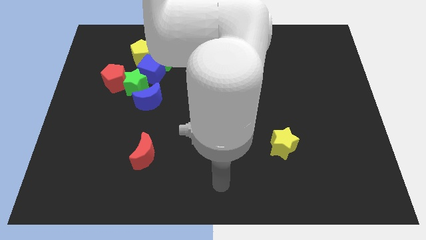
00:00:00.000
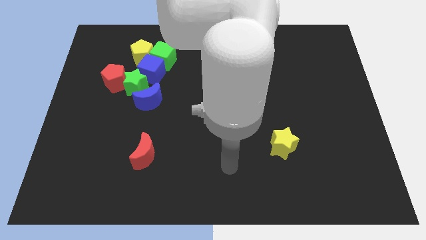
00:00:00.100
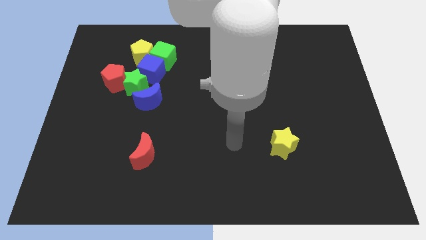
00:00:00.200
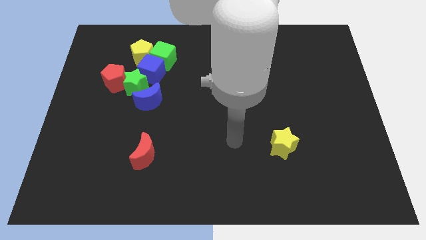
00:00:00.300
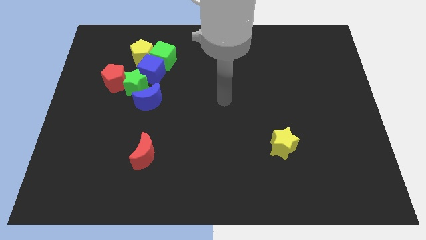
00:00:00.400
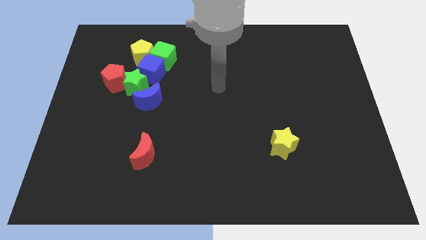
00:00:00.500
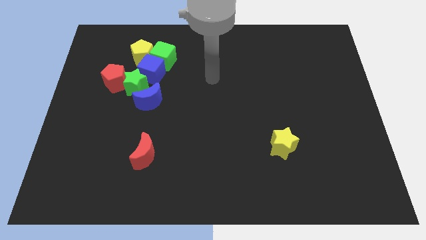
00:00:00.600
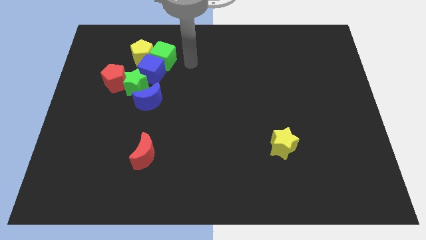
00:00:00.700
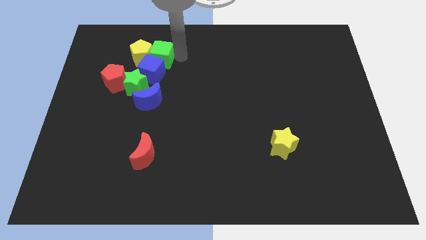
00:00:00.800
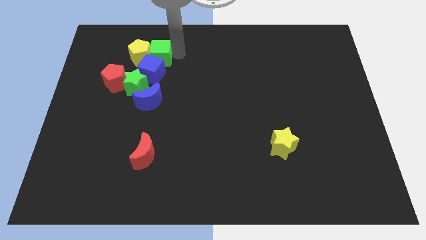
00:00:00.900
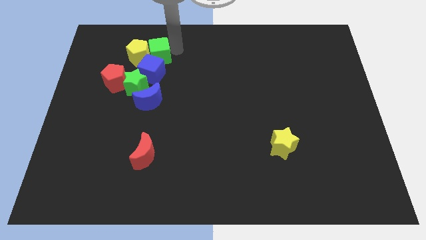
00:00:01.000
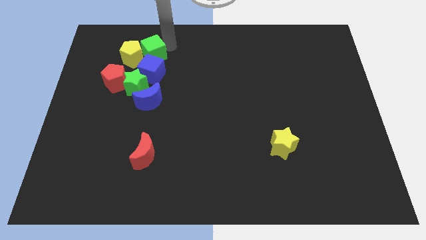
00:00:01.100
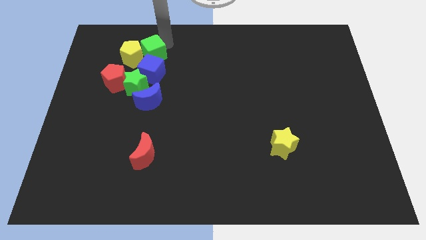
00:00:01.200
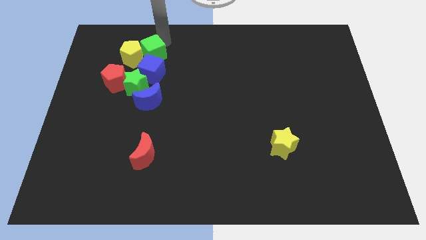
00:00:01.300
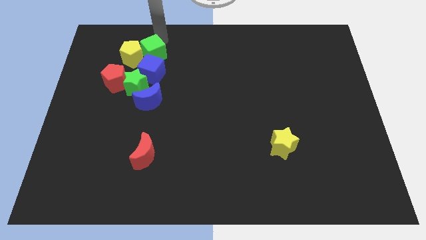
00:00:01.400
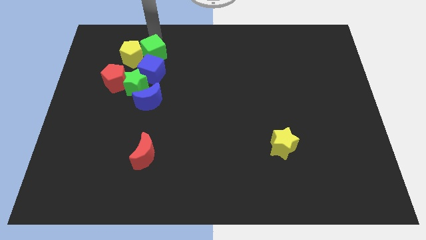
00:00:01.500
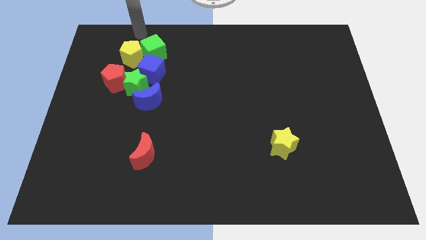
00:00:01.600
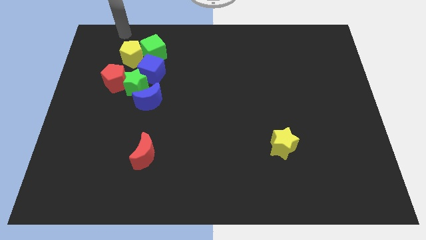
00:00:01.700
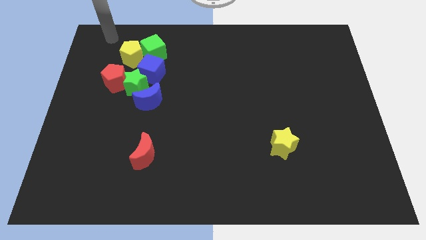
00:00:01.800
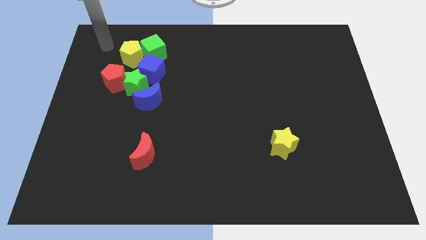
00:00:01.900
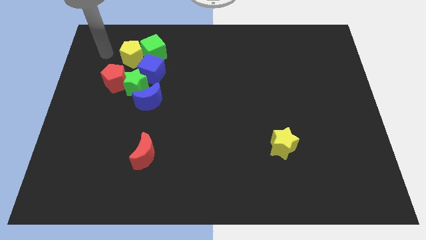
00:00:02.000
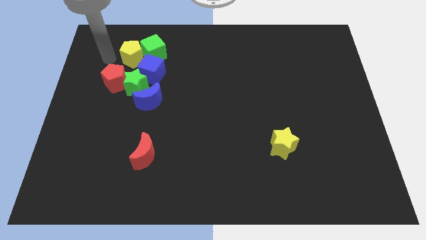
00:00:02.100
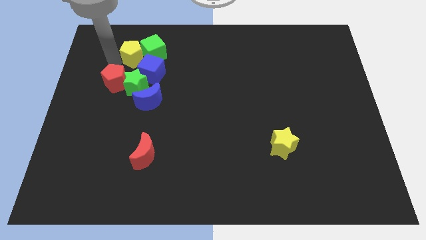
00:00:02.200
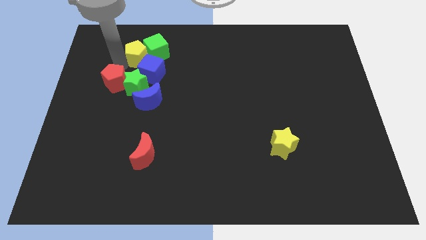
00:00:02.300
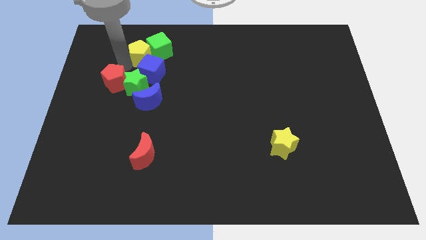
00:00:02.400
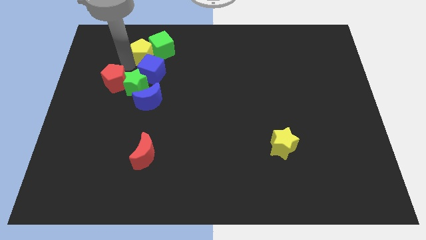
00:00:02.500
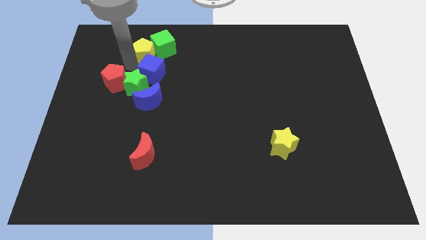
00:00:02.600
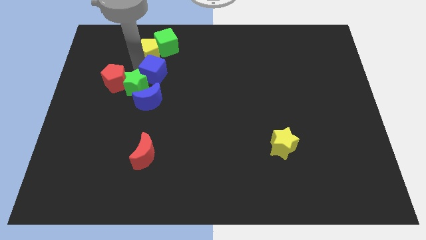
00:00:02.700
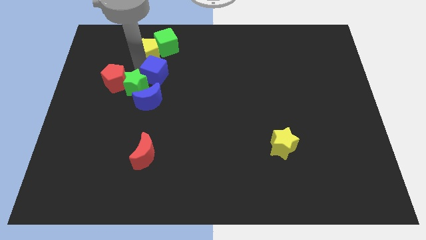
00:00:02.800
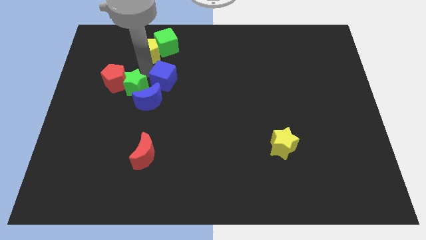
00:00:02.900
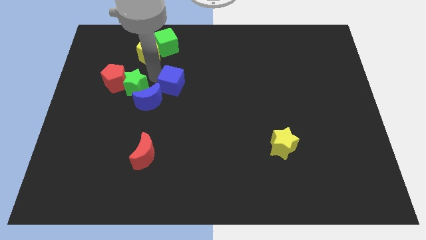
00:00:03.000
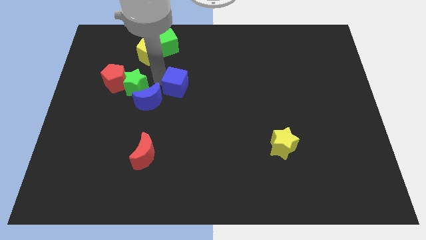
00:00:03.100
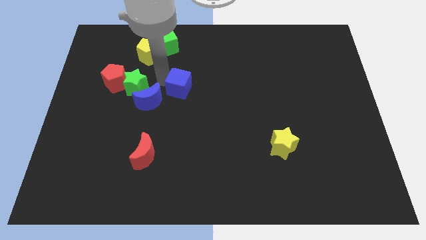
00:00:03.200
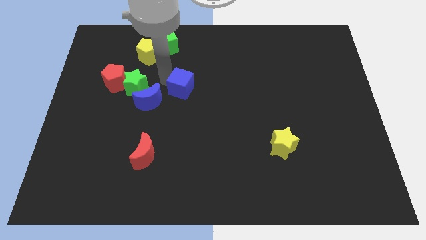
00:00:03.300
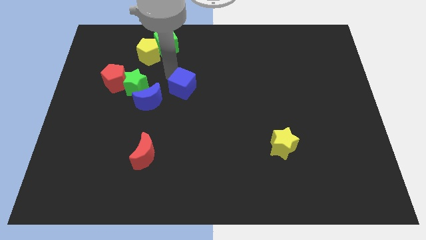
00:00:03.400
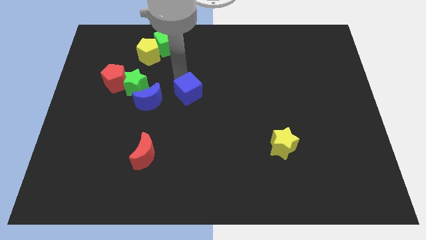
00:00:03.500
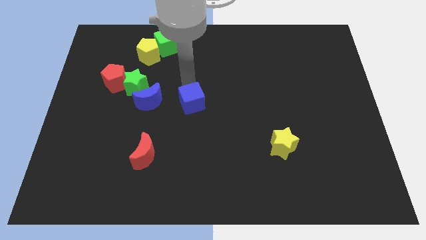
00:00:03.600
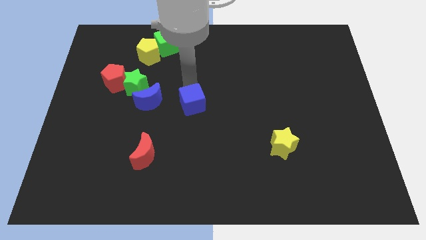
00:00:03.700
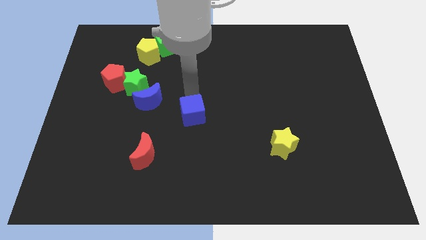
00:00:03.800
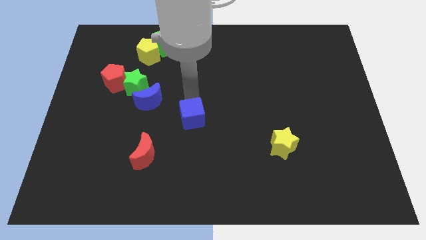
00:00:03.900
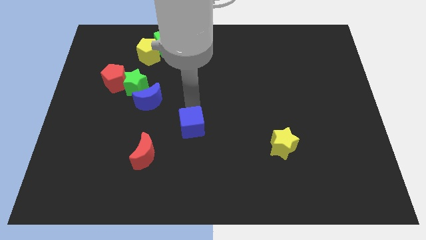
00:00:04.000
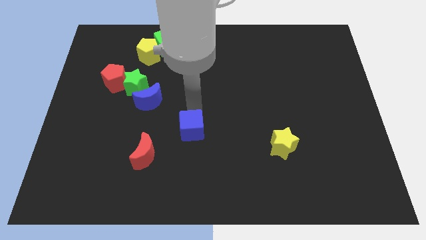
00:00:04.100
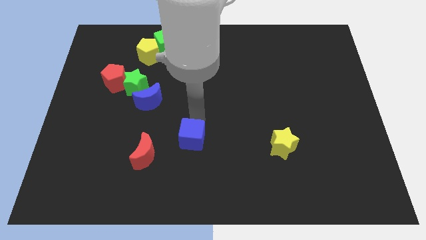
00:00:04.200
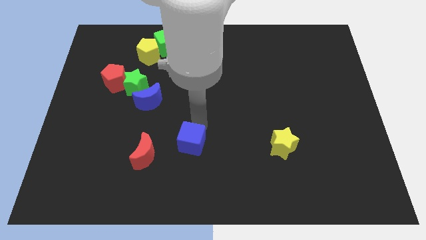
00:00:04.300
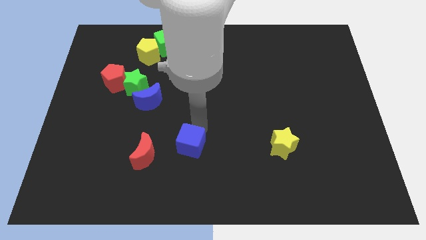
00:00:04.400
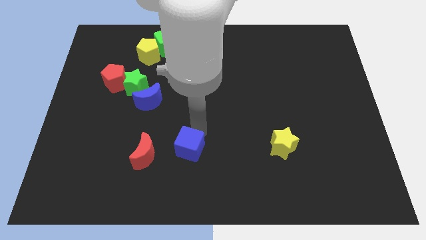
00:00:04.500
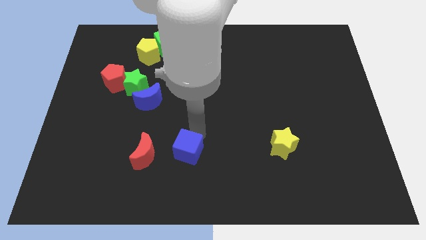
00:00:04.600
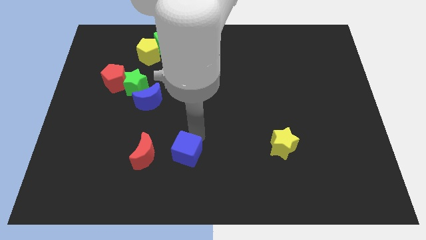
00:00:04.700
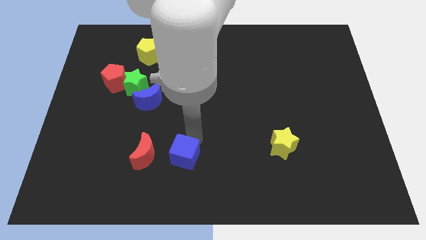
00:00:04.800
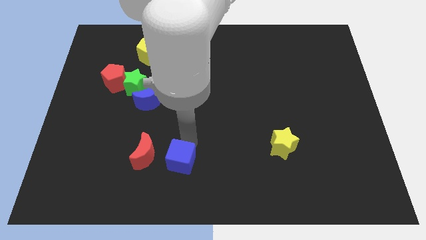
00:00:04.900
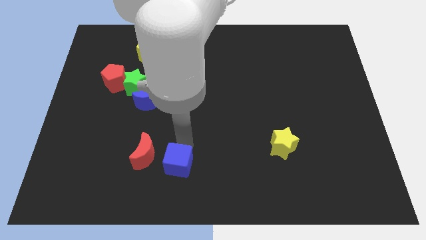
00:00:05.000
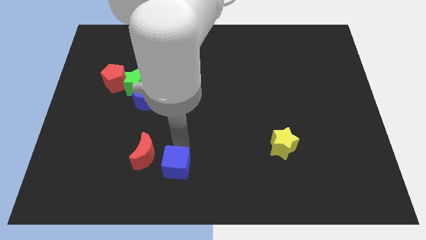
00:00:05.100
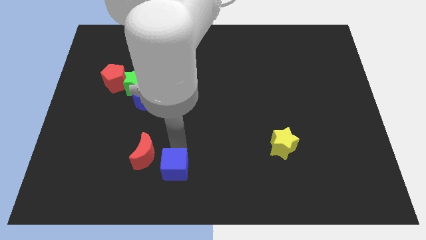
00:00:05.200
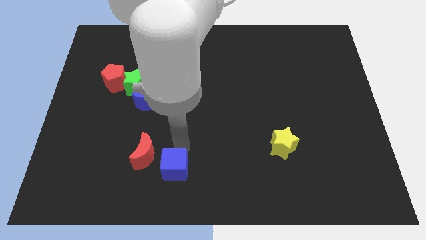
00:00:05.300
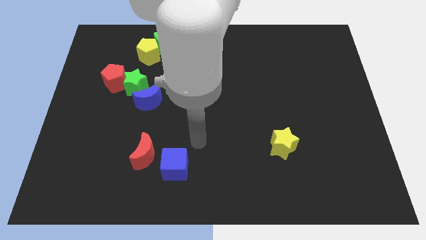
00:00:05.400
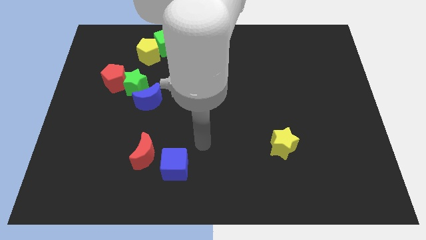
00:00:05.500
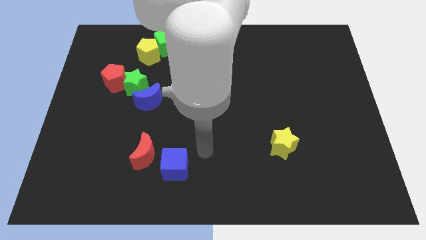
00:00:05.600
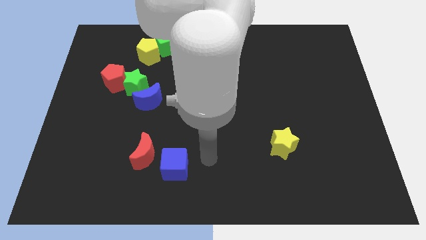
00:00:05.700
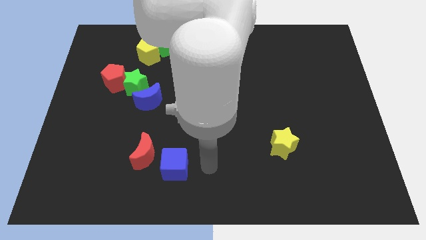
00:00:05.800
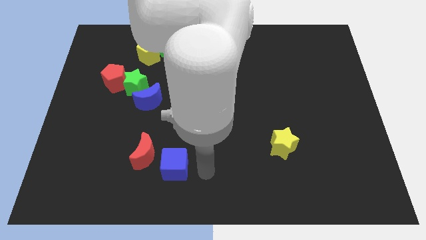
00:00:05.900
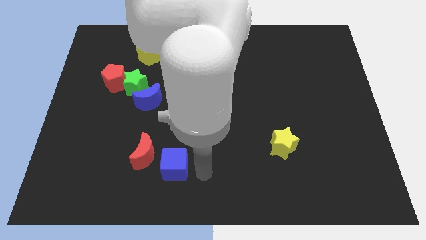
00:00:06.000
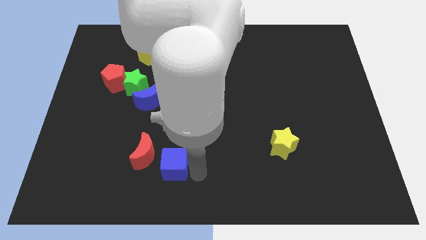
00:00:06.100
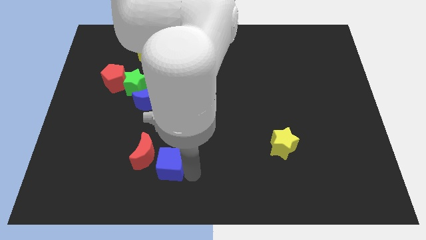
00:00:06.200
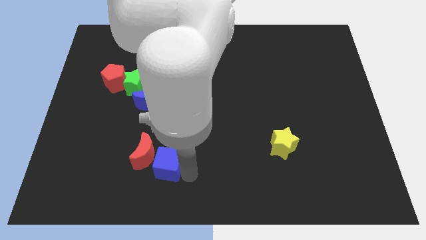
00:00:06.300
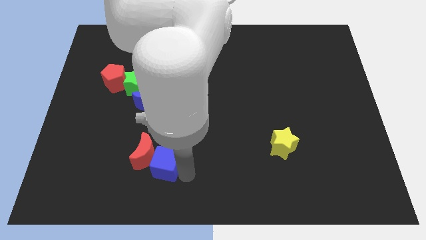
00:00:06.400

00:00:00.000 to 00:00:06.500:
put the blue cube next to the red moon

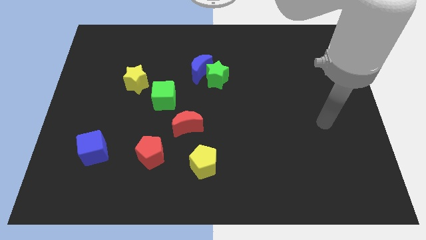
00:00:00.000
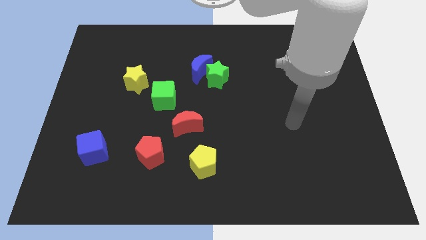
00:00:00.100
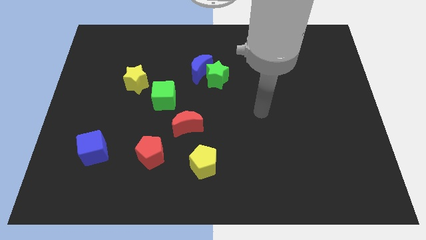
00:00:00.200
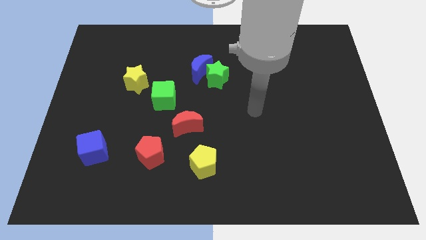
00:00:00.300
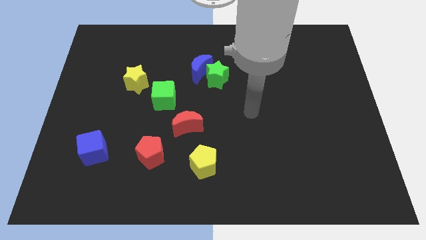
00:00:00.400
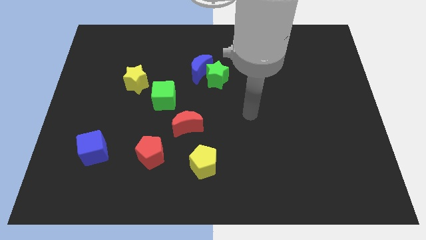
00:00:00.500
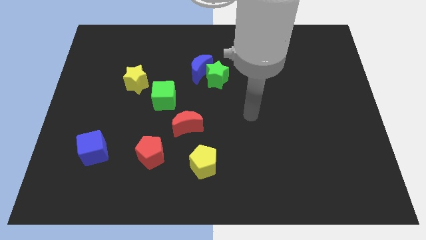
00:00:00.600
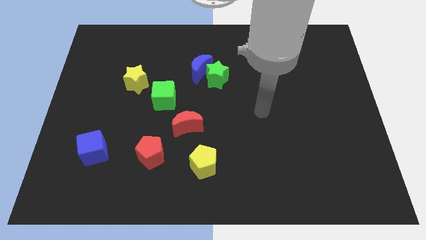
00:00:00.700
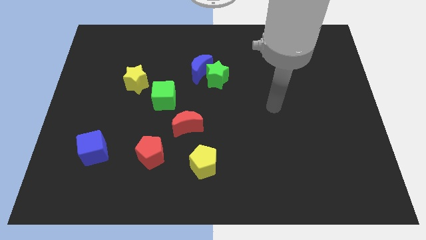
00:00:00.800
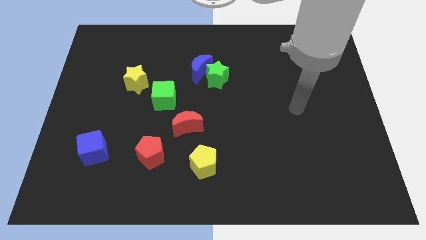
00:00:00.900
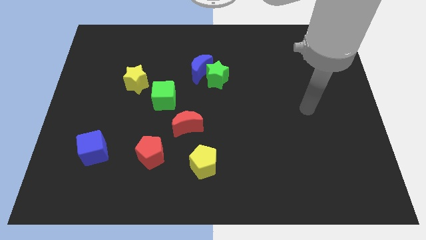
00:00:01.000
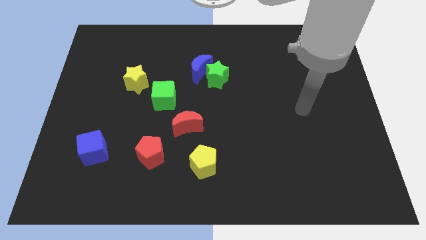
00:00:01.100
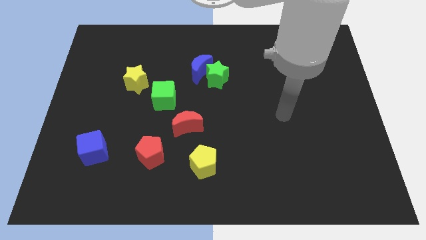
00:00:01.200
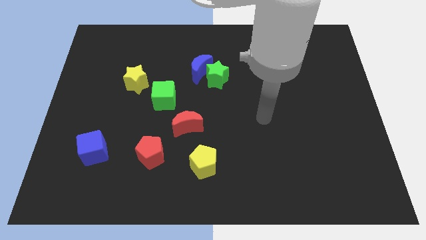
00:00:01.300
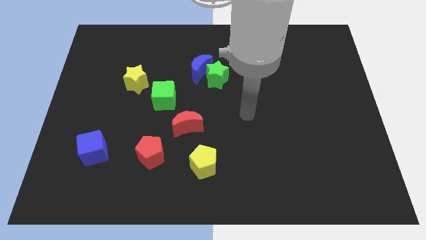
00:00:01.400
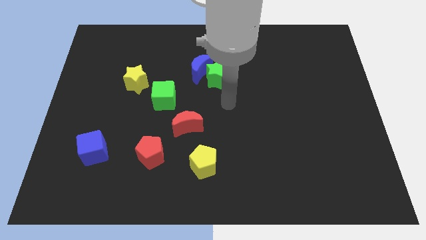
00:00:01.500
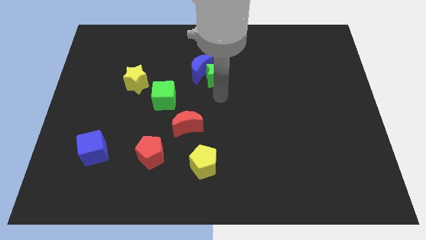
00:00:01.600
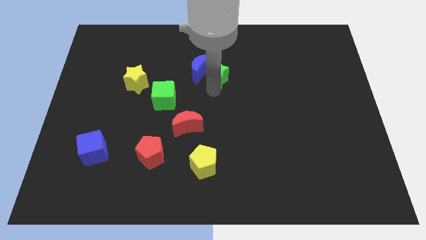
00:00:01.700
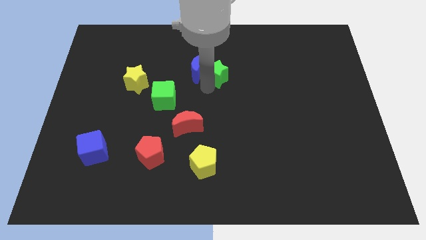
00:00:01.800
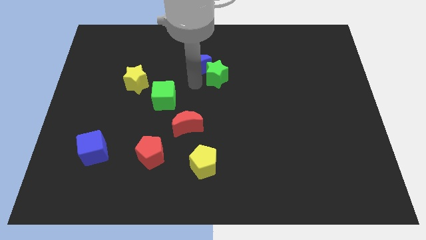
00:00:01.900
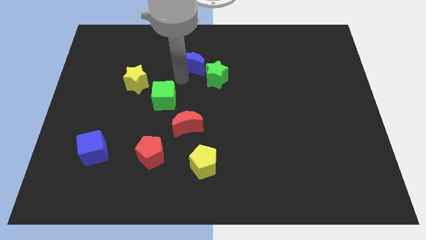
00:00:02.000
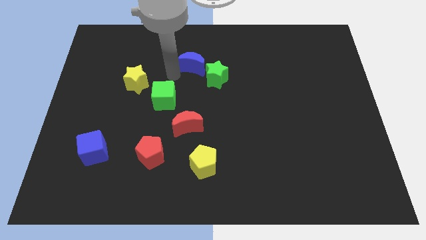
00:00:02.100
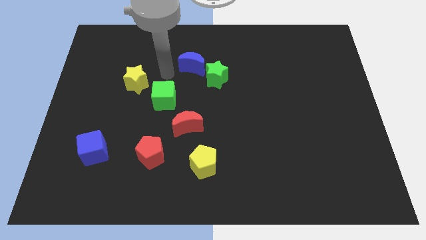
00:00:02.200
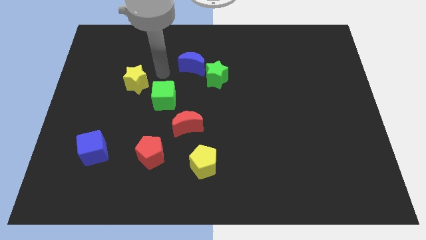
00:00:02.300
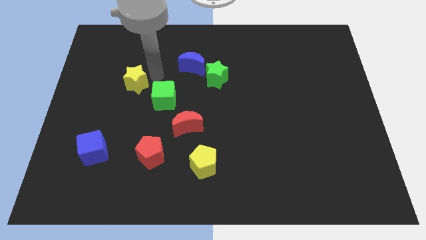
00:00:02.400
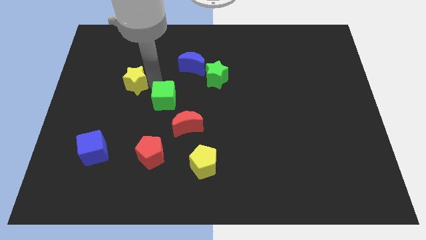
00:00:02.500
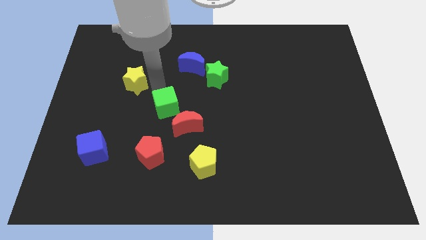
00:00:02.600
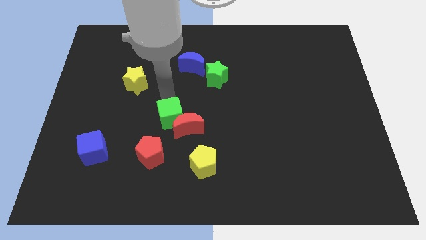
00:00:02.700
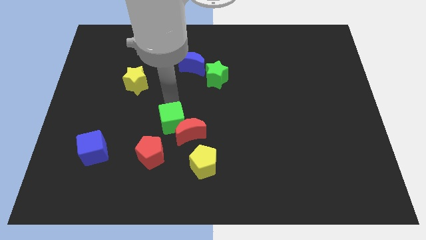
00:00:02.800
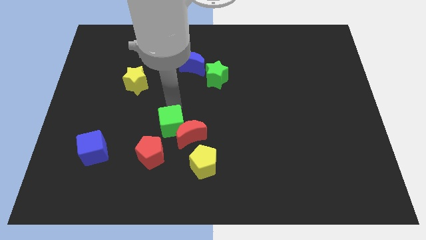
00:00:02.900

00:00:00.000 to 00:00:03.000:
move the green cube next to the red moon
